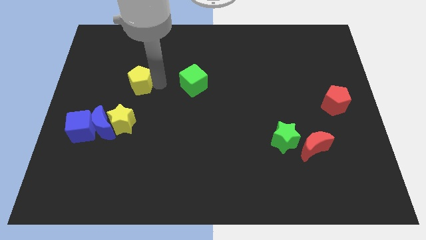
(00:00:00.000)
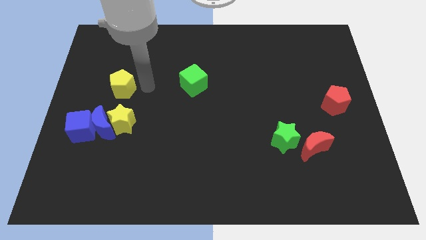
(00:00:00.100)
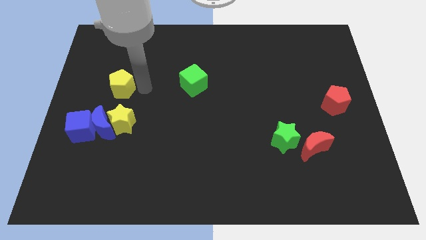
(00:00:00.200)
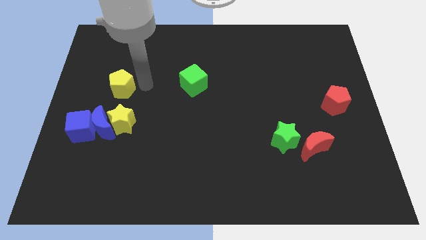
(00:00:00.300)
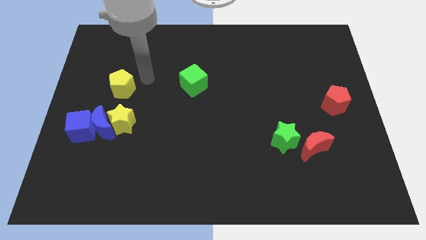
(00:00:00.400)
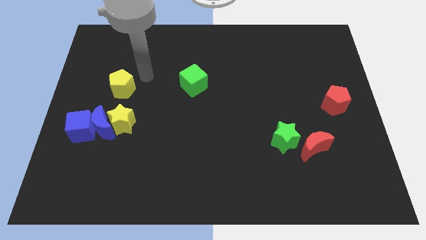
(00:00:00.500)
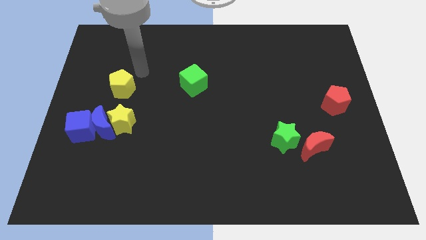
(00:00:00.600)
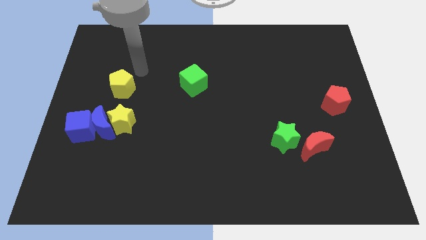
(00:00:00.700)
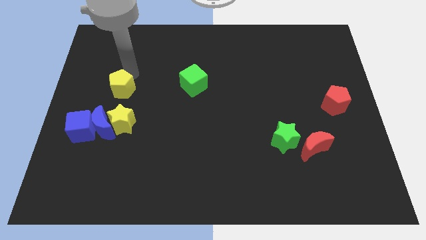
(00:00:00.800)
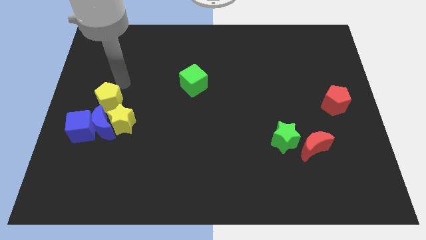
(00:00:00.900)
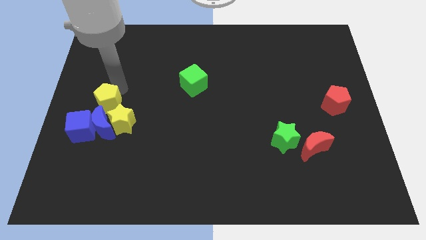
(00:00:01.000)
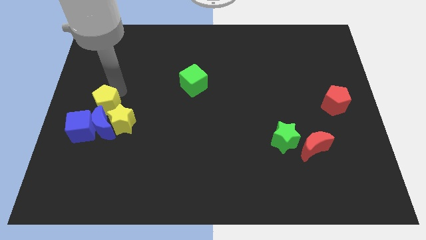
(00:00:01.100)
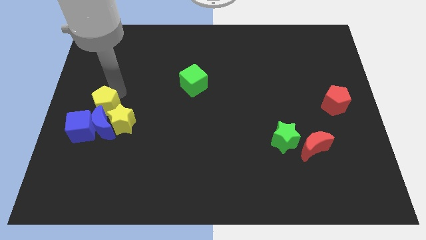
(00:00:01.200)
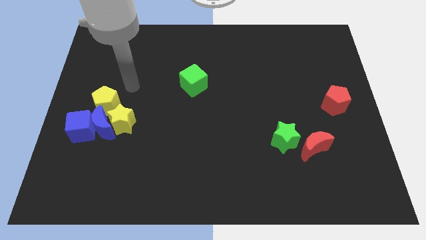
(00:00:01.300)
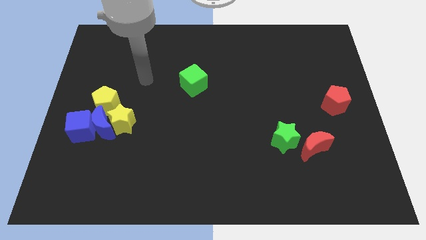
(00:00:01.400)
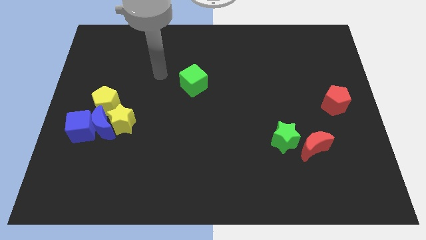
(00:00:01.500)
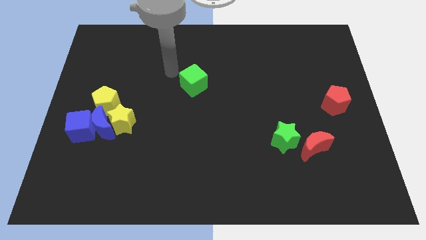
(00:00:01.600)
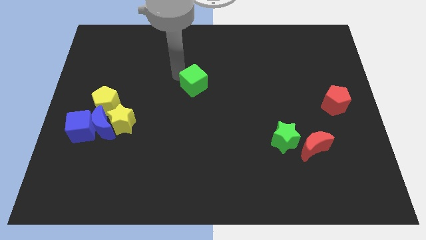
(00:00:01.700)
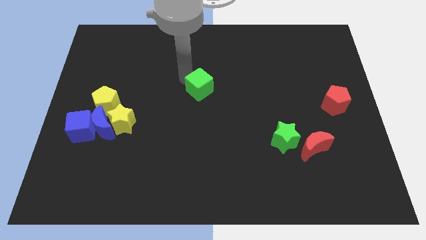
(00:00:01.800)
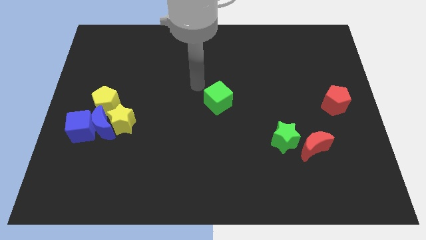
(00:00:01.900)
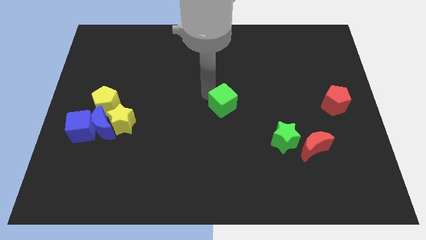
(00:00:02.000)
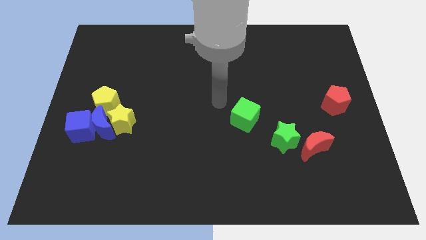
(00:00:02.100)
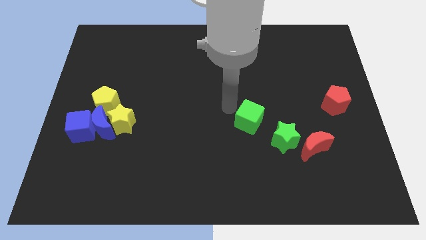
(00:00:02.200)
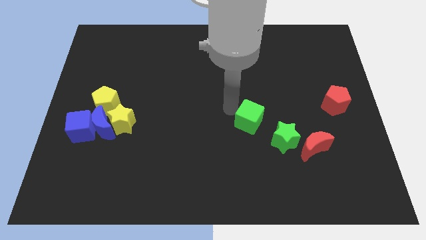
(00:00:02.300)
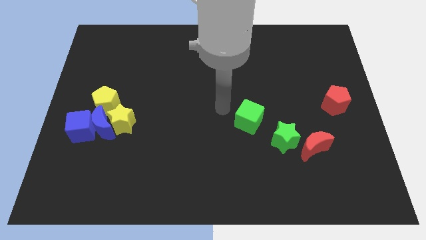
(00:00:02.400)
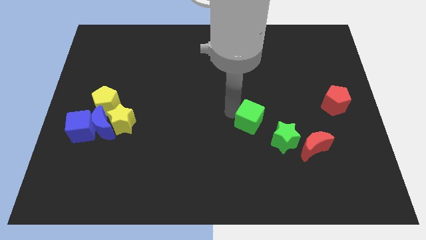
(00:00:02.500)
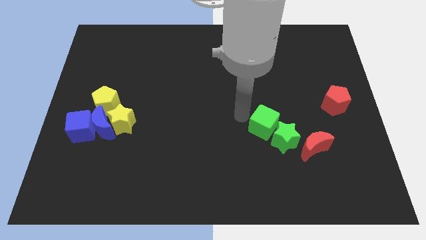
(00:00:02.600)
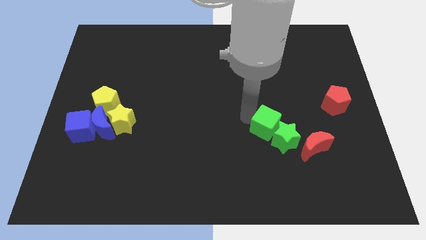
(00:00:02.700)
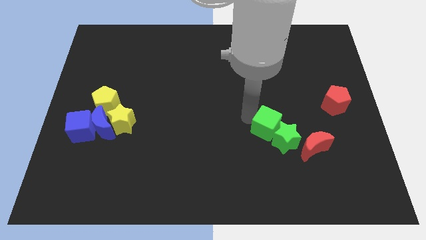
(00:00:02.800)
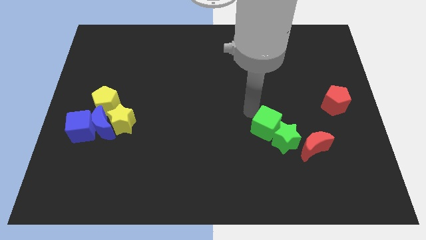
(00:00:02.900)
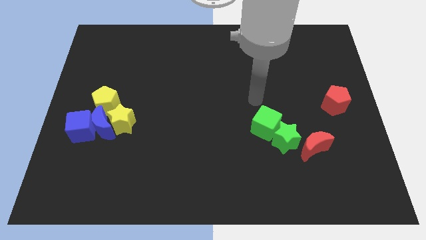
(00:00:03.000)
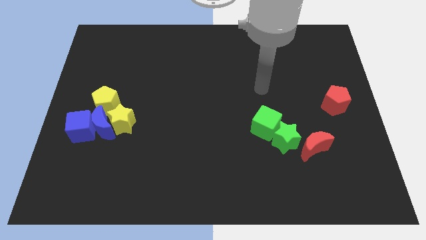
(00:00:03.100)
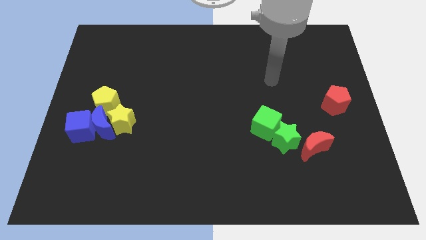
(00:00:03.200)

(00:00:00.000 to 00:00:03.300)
attach the green cube to the green star

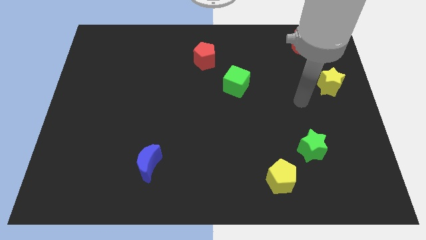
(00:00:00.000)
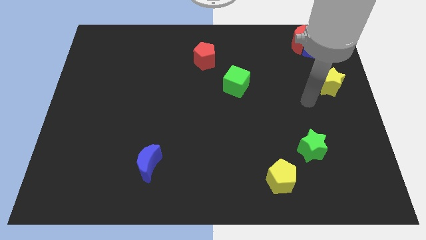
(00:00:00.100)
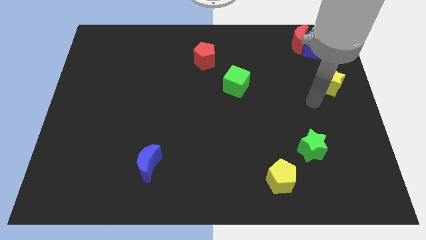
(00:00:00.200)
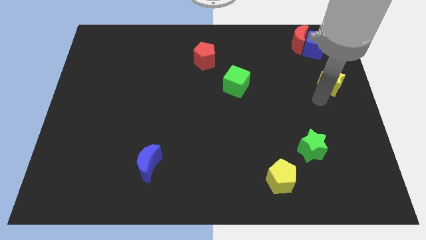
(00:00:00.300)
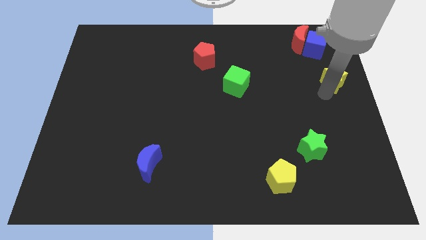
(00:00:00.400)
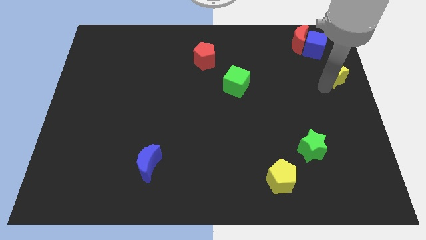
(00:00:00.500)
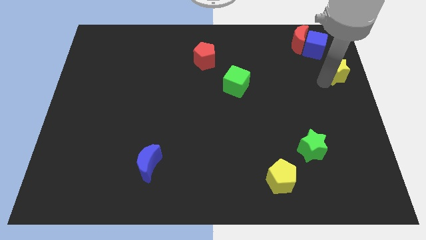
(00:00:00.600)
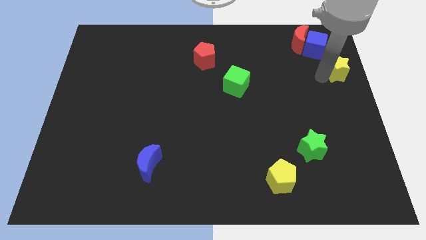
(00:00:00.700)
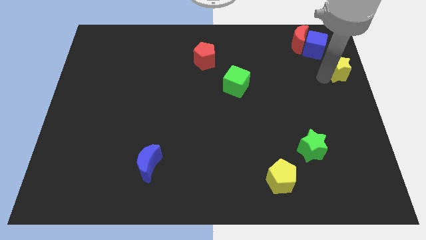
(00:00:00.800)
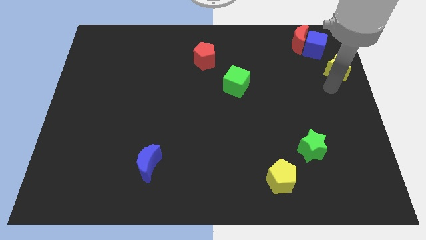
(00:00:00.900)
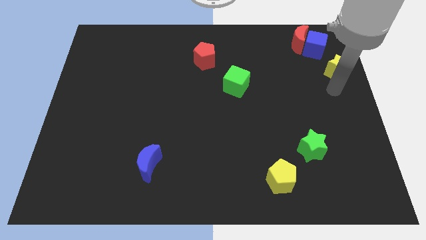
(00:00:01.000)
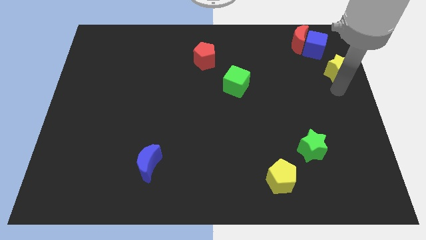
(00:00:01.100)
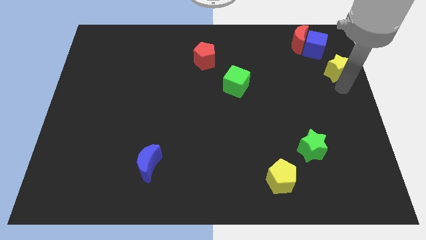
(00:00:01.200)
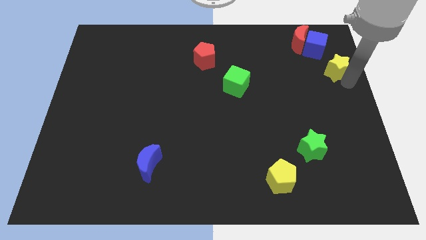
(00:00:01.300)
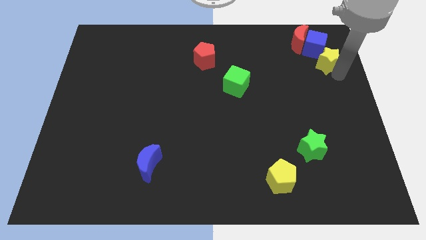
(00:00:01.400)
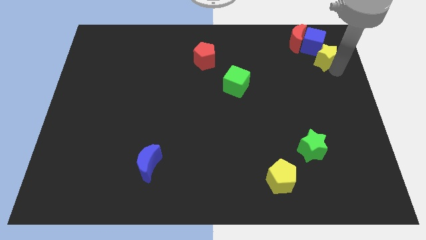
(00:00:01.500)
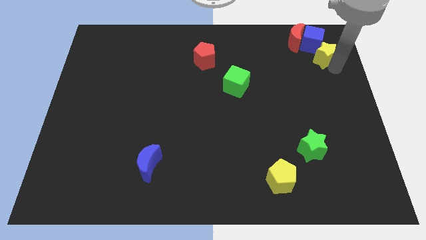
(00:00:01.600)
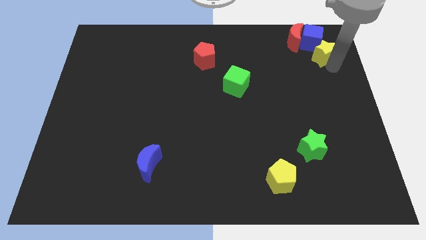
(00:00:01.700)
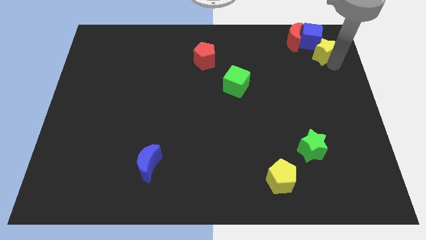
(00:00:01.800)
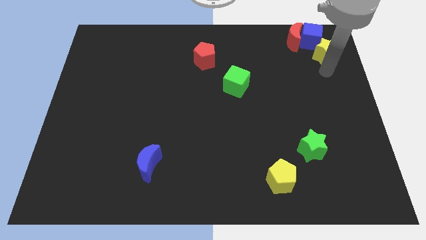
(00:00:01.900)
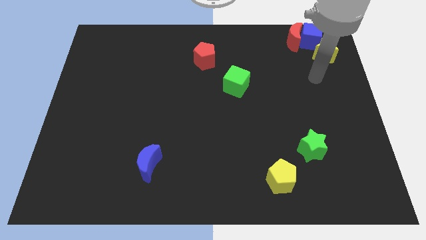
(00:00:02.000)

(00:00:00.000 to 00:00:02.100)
drag the yellow star to the bottom right of the blue cube

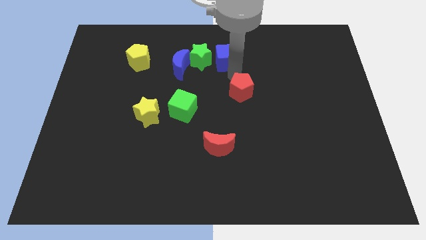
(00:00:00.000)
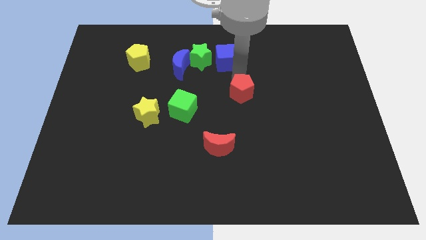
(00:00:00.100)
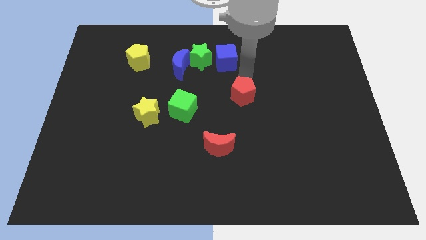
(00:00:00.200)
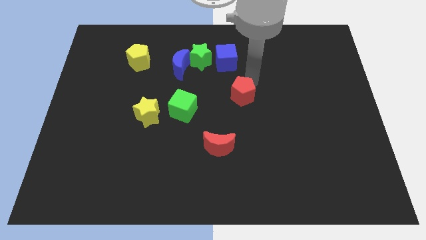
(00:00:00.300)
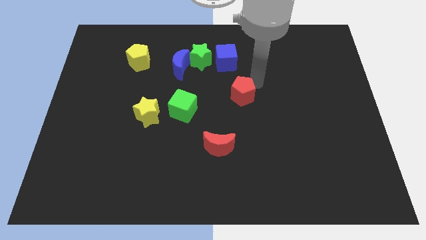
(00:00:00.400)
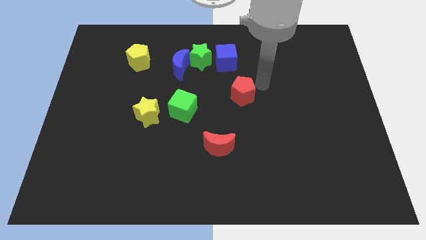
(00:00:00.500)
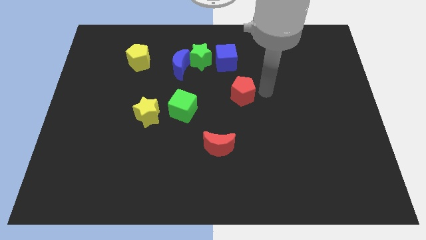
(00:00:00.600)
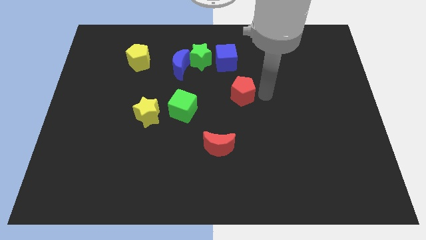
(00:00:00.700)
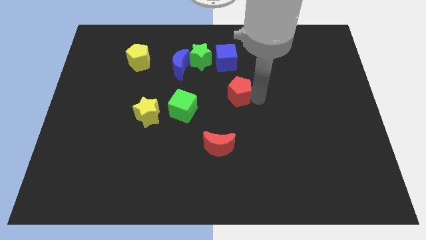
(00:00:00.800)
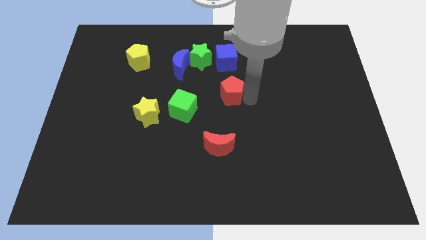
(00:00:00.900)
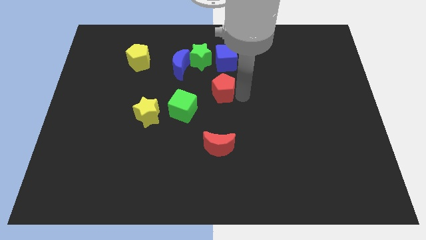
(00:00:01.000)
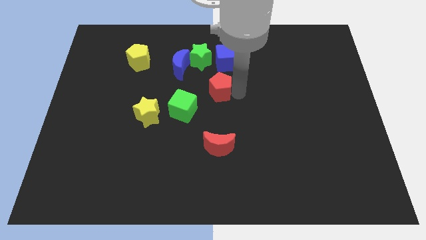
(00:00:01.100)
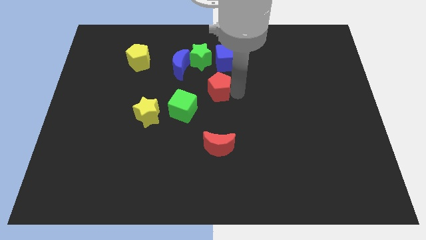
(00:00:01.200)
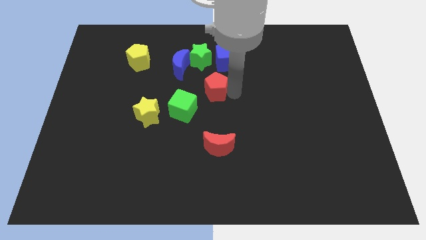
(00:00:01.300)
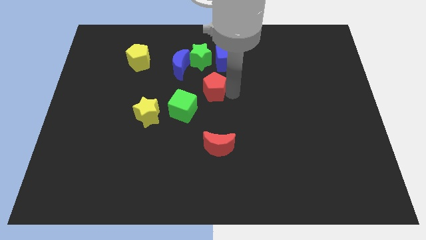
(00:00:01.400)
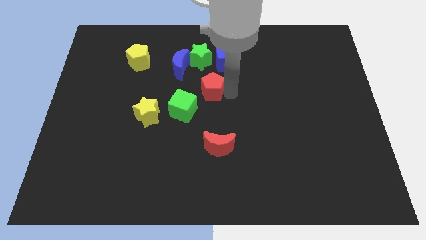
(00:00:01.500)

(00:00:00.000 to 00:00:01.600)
place the red pentagon below the green star

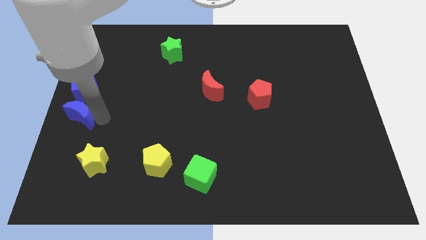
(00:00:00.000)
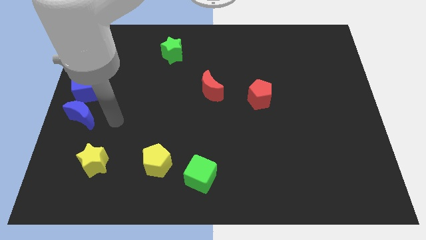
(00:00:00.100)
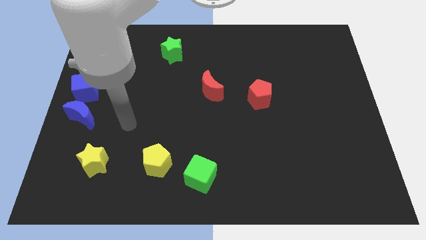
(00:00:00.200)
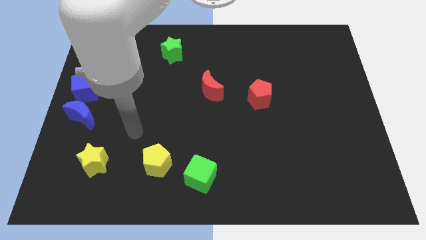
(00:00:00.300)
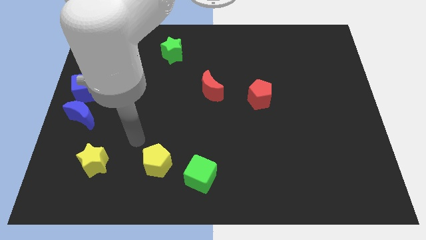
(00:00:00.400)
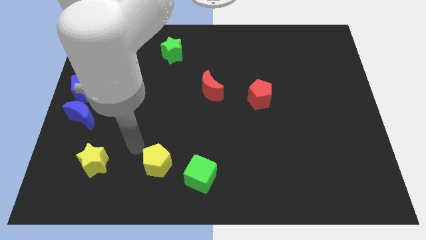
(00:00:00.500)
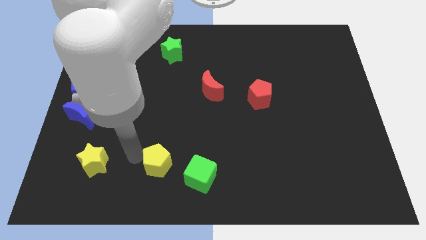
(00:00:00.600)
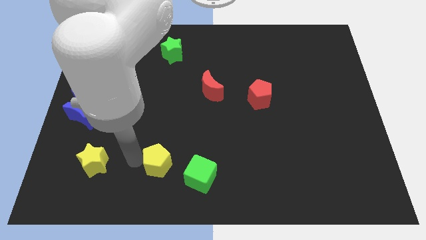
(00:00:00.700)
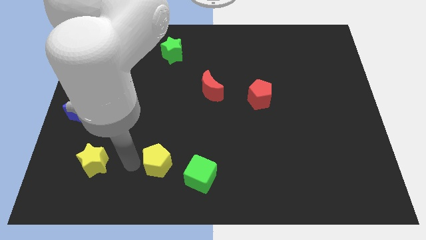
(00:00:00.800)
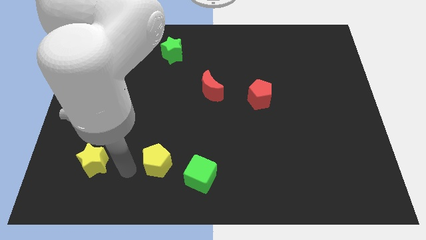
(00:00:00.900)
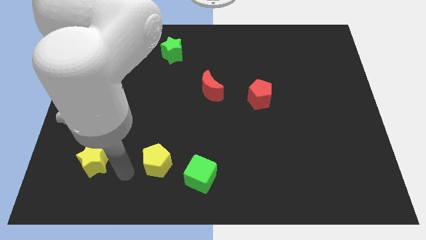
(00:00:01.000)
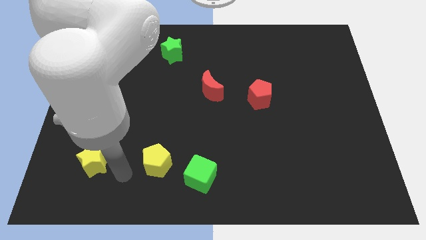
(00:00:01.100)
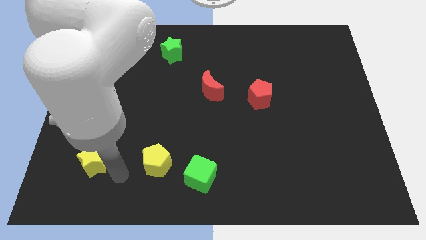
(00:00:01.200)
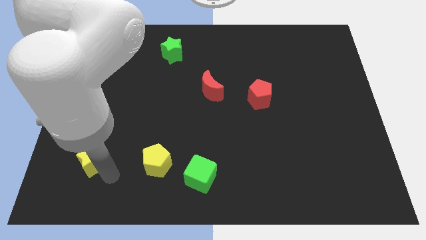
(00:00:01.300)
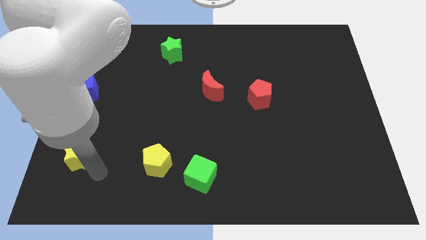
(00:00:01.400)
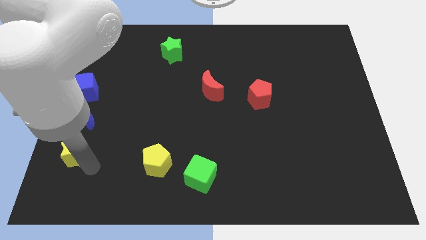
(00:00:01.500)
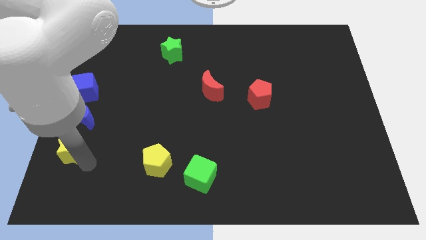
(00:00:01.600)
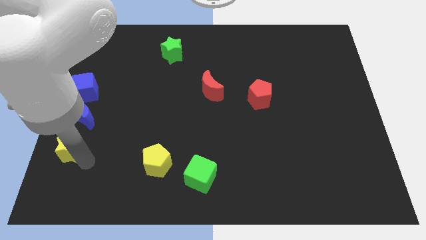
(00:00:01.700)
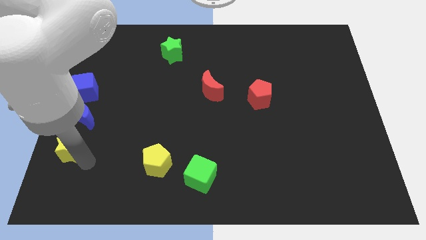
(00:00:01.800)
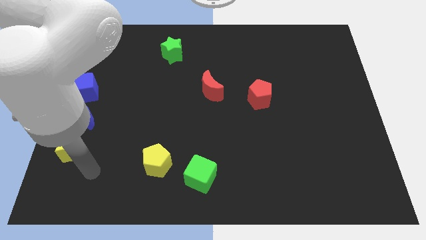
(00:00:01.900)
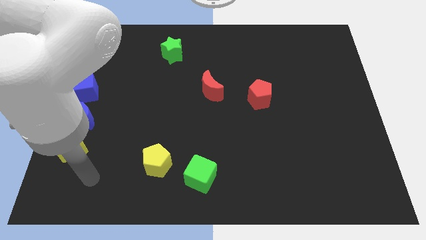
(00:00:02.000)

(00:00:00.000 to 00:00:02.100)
push the yellow star into the blue crescent
